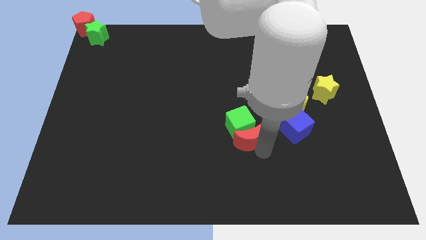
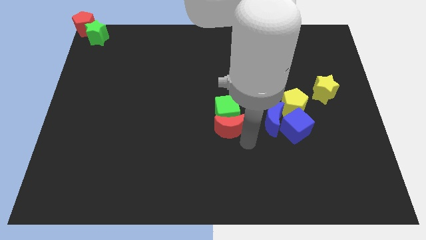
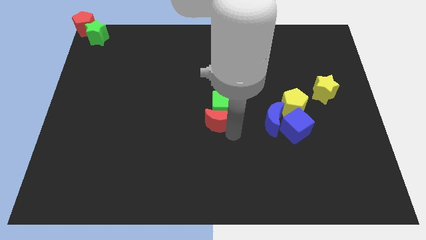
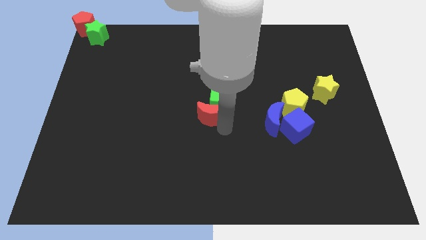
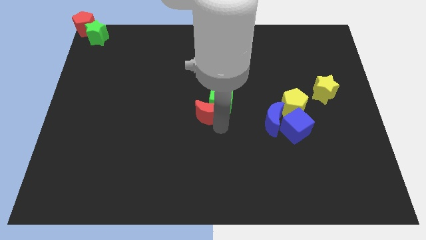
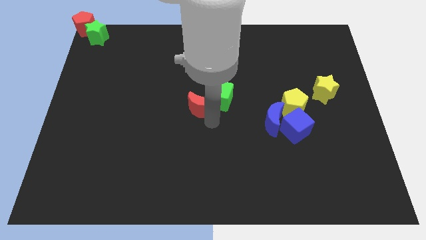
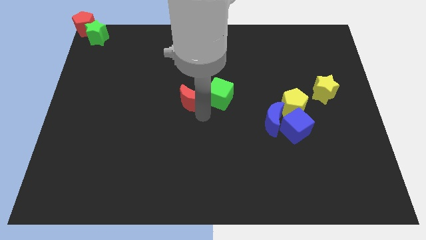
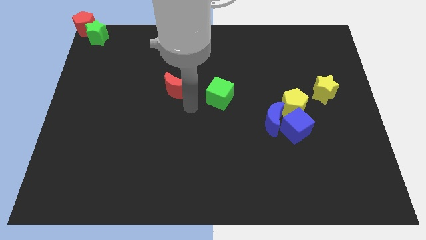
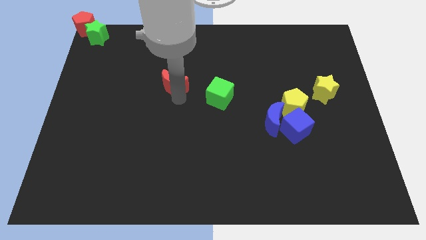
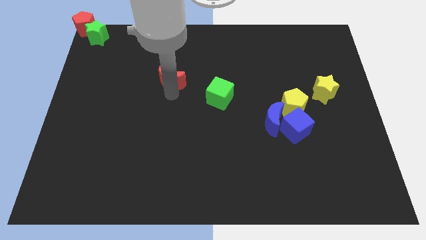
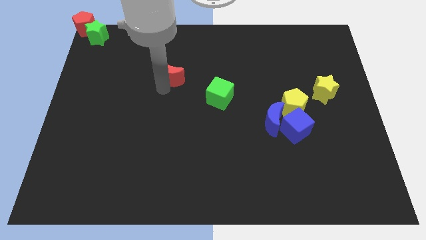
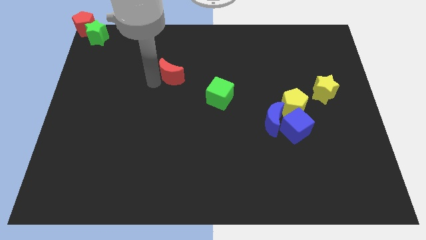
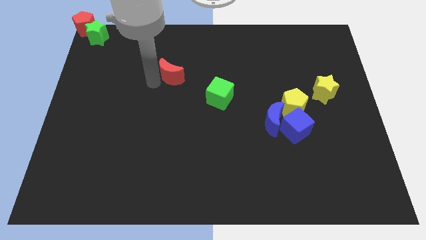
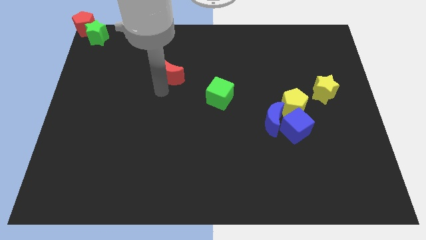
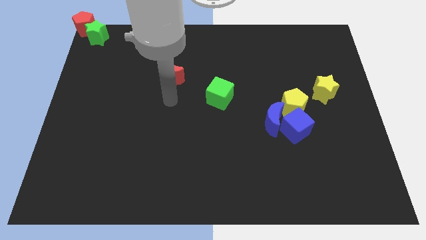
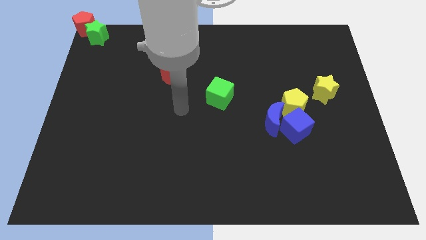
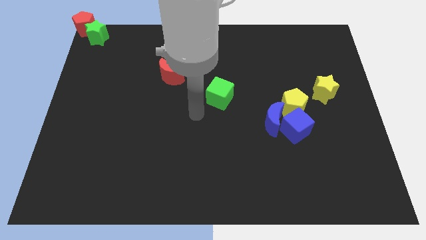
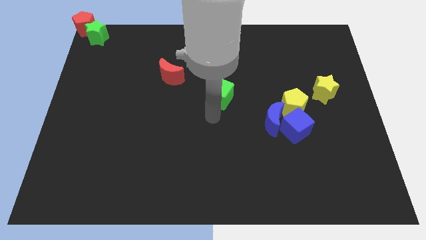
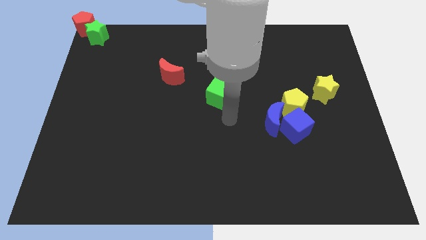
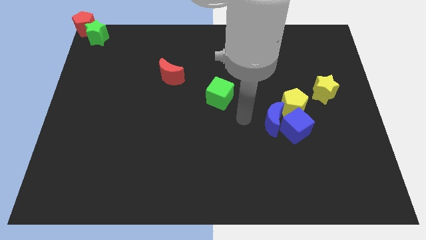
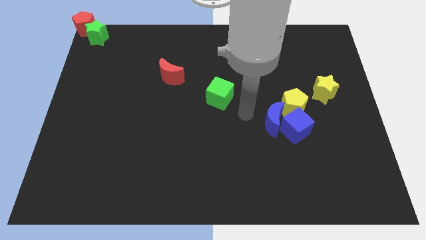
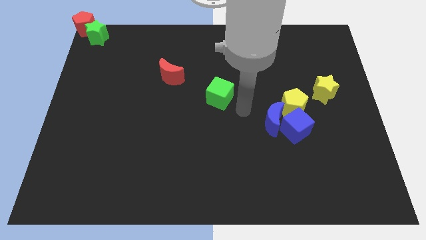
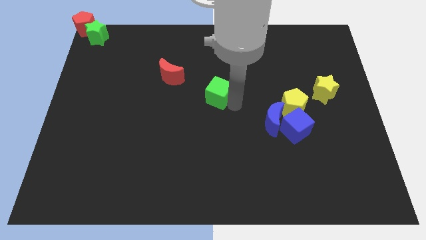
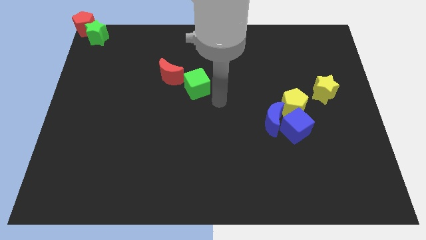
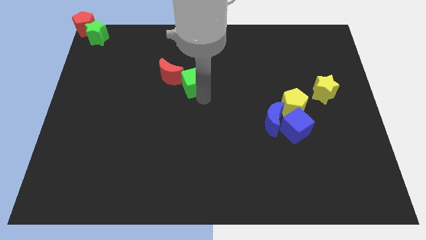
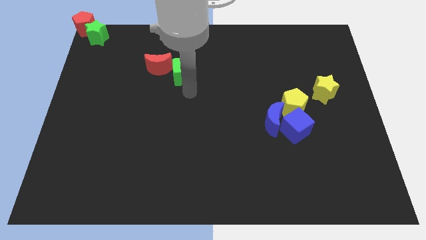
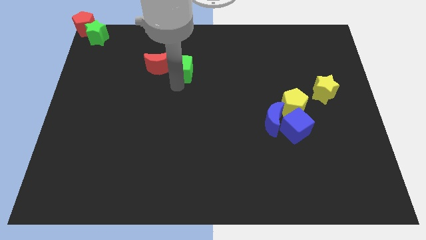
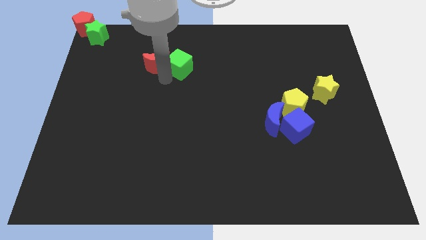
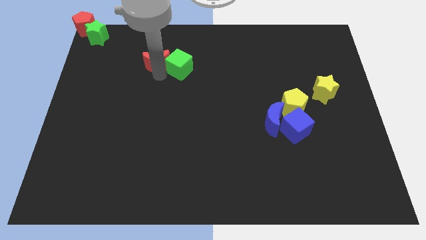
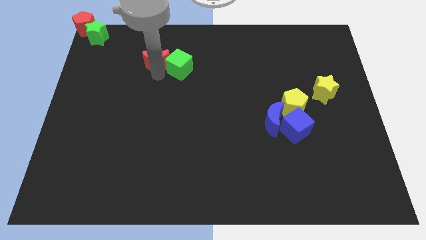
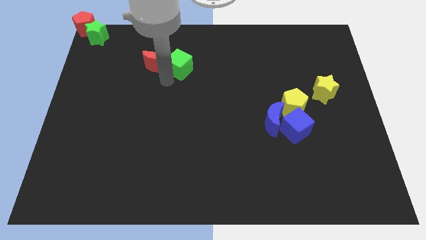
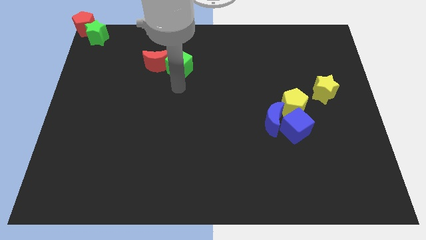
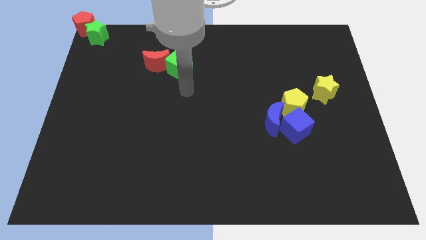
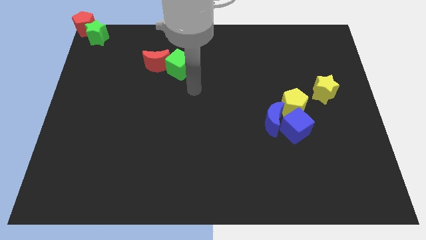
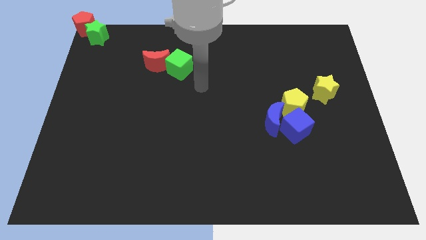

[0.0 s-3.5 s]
push green cube in to red crescent

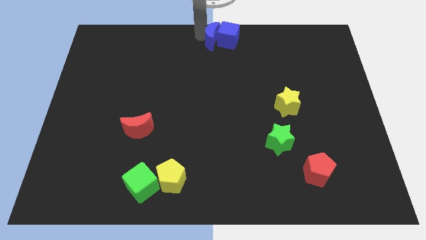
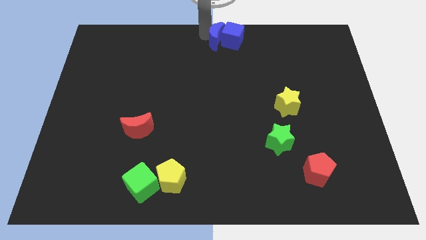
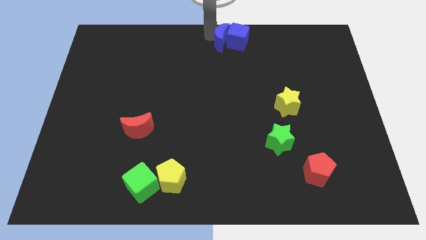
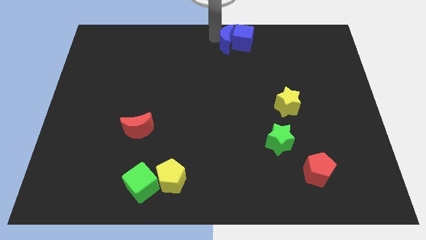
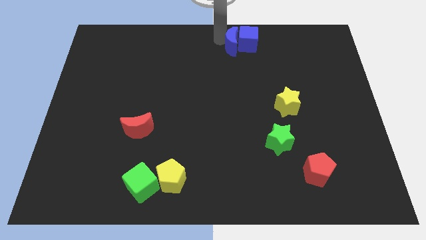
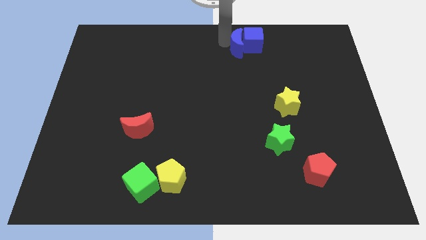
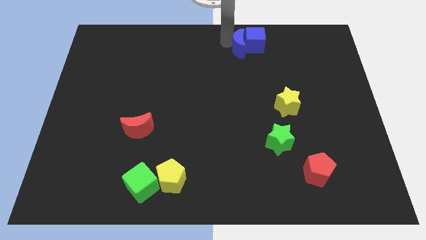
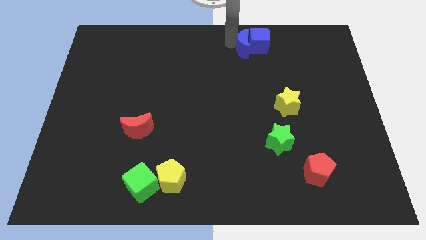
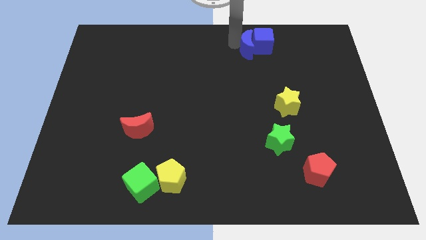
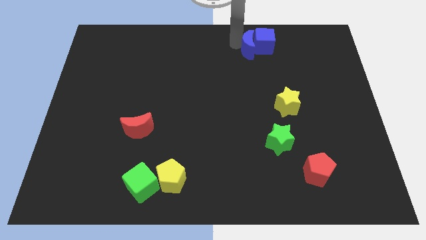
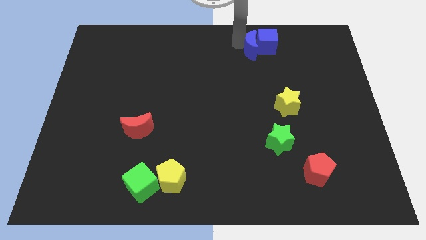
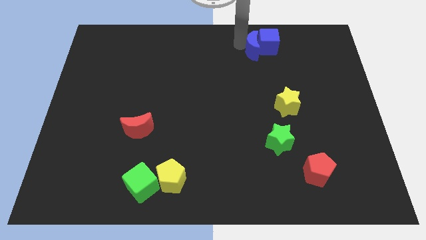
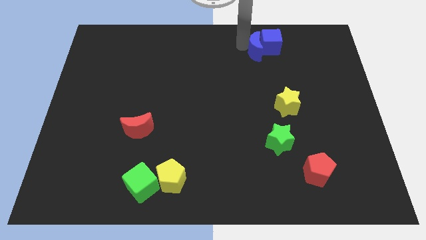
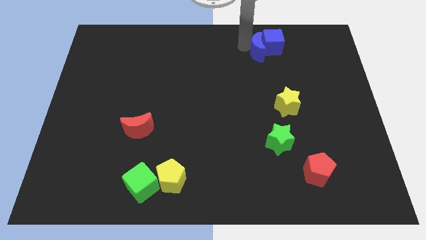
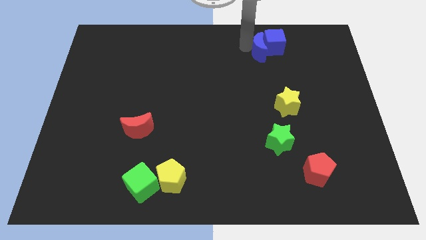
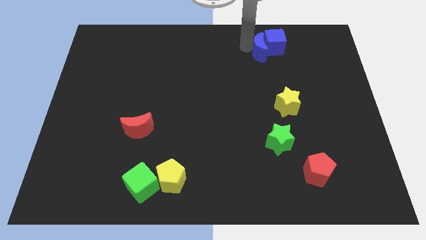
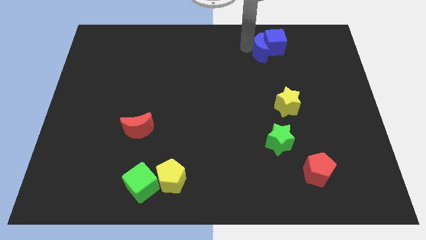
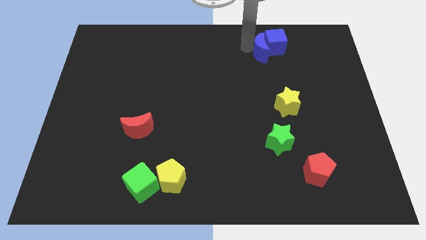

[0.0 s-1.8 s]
move the blue blocks to the top of the yellow star

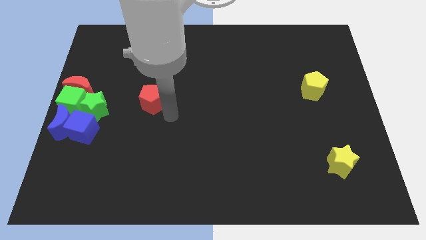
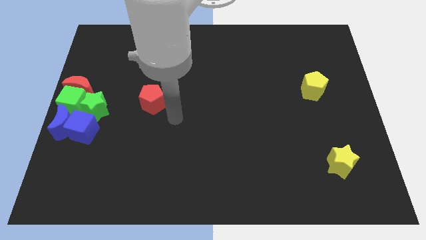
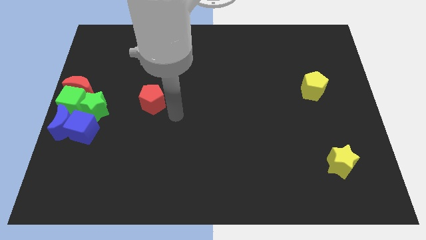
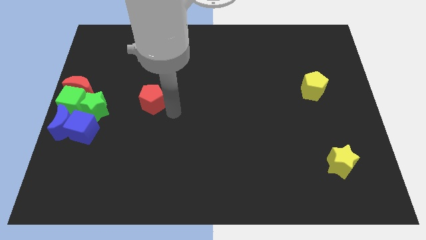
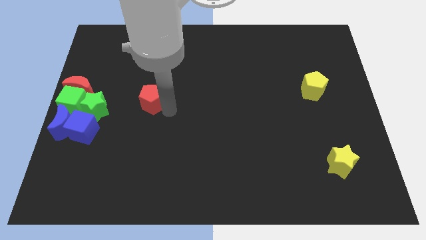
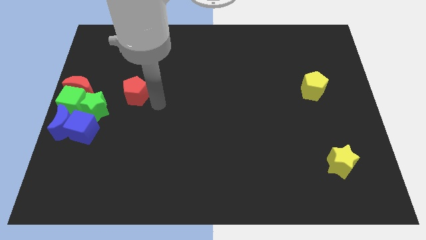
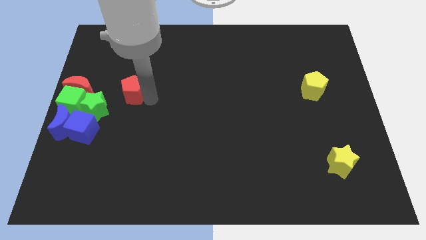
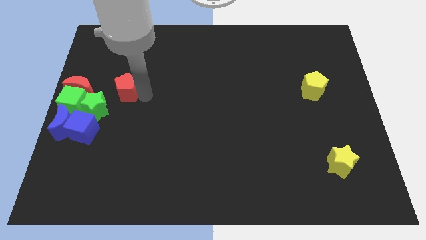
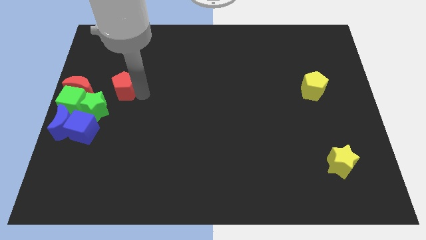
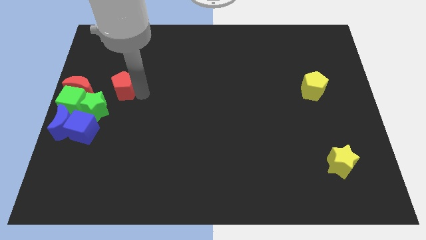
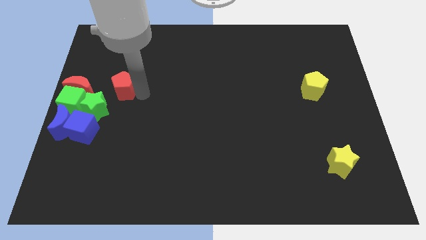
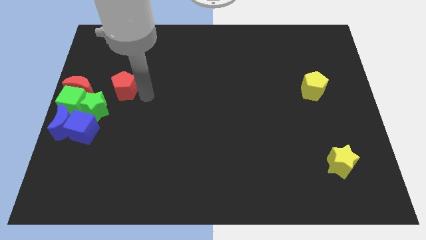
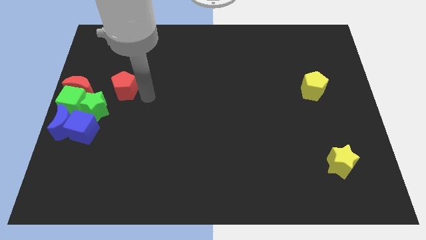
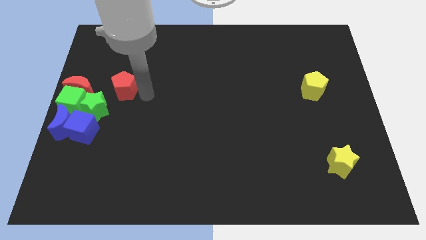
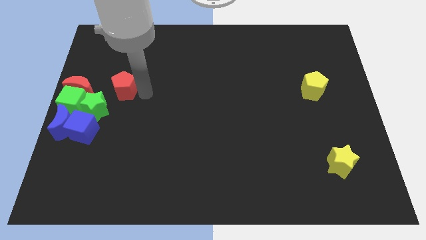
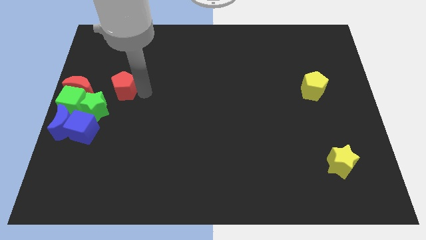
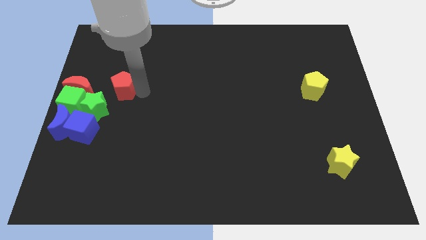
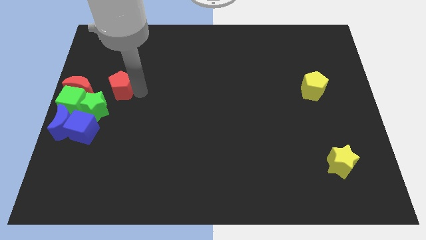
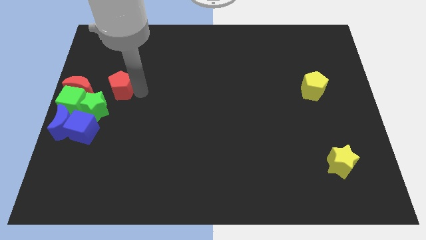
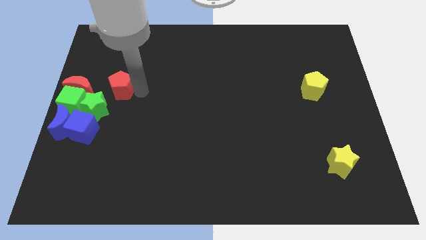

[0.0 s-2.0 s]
drag the red pentagon towards the top of the green star

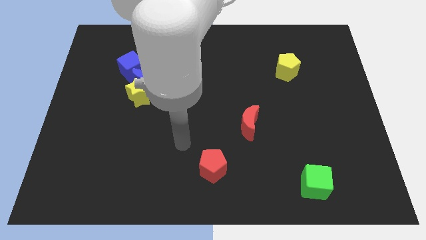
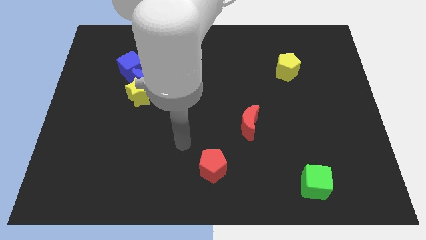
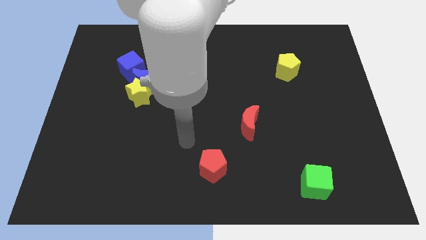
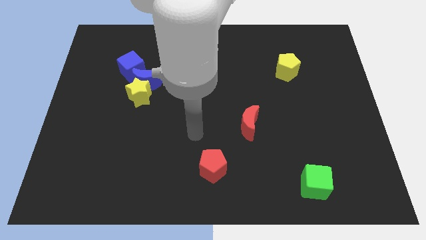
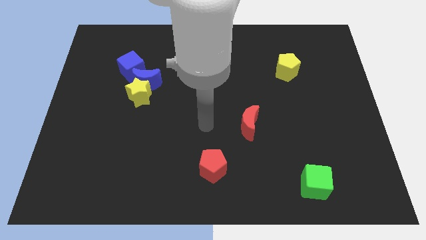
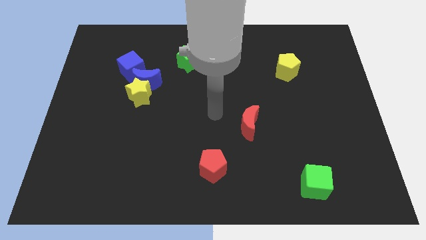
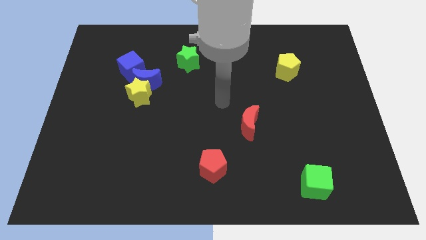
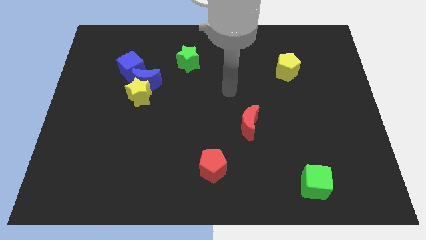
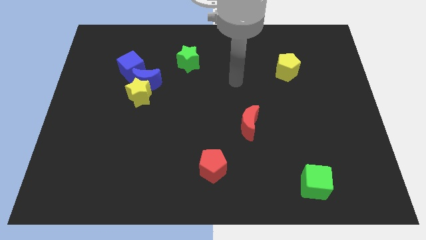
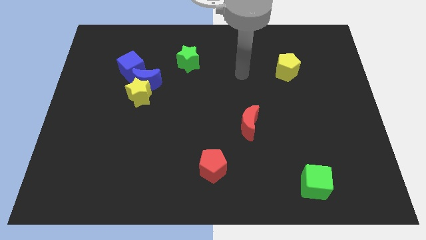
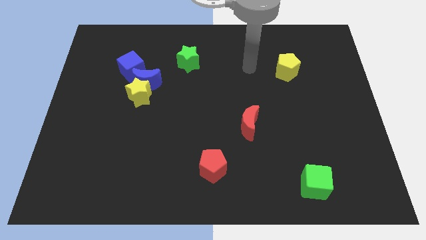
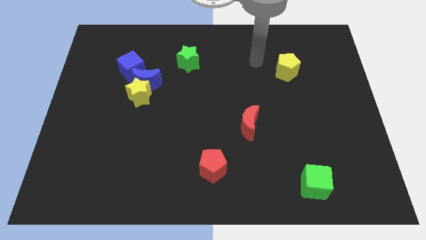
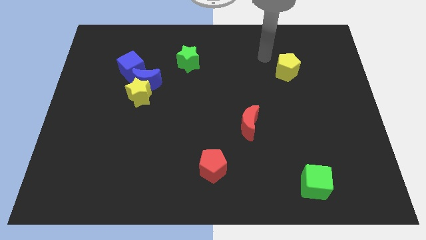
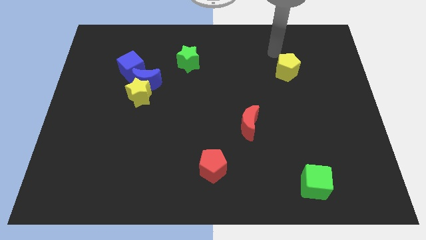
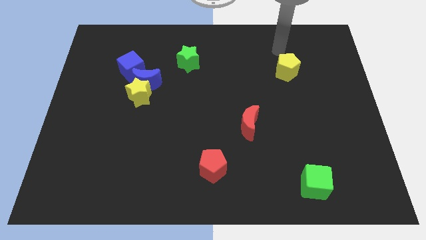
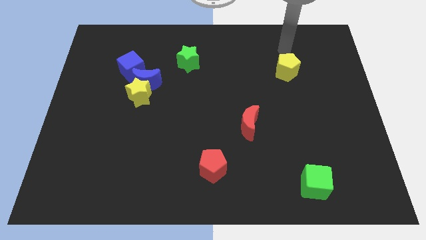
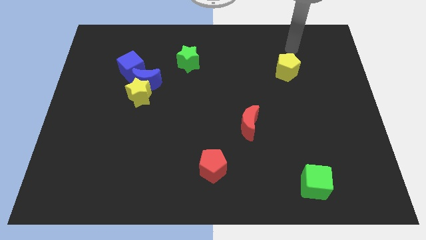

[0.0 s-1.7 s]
move your hand towards the top right

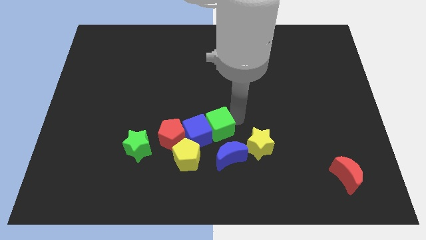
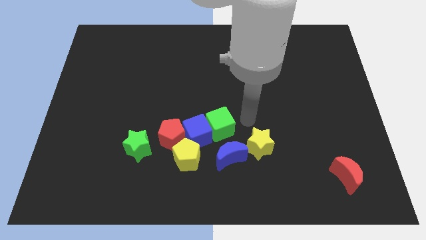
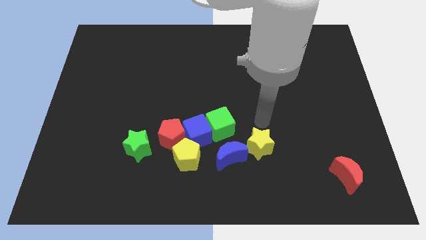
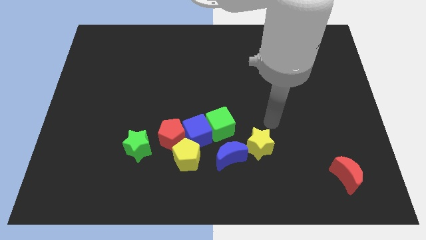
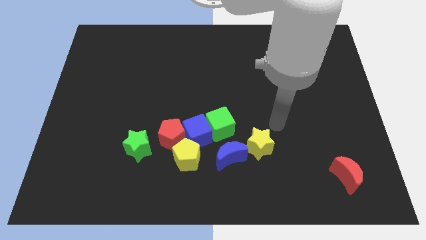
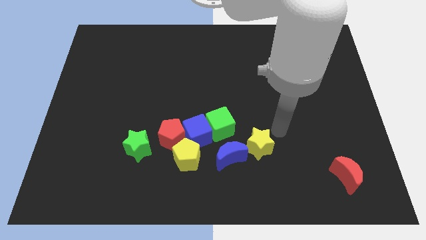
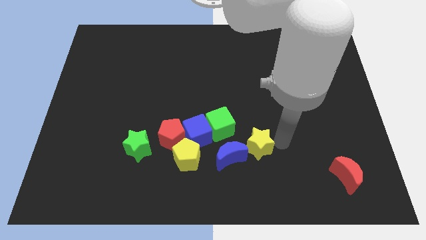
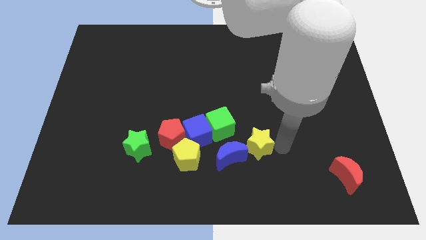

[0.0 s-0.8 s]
move the arm away from the green cube
